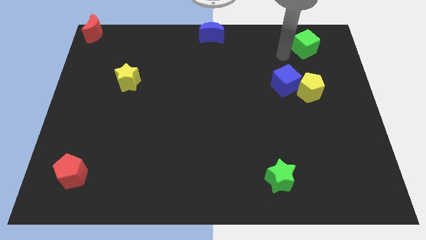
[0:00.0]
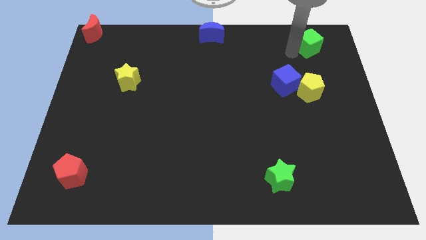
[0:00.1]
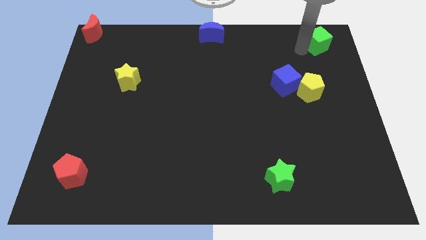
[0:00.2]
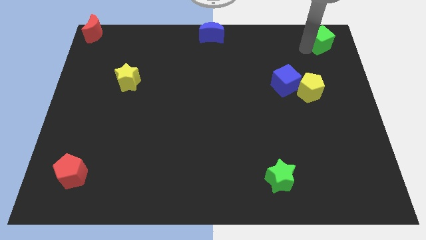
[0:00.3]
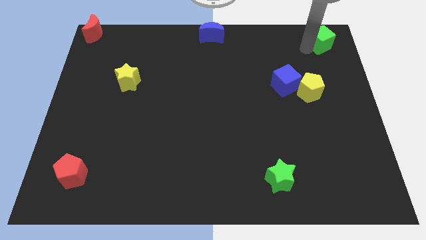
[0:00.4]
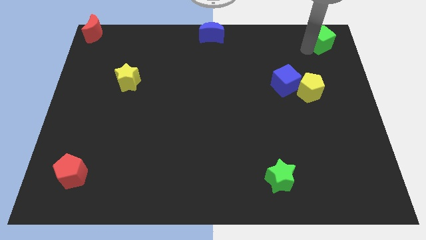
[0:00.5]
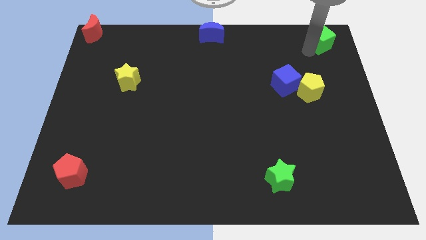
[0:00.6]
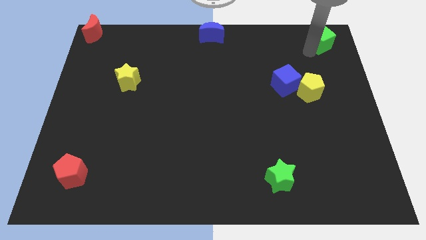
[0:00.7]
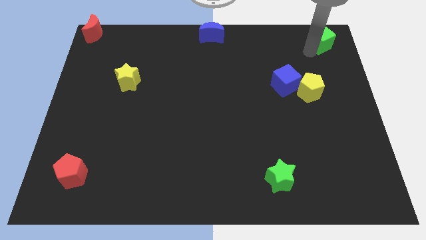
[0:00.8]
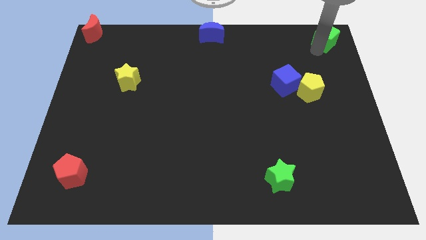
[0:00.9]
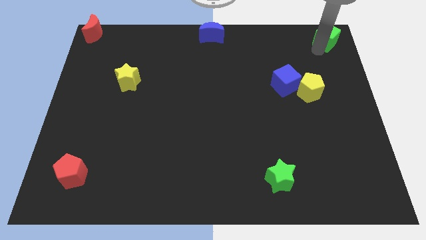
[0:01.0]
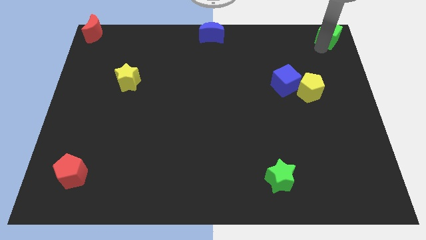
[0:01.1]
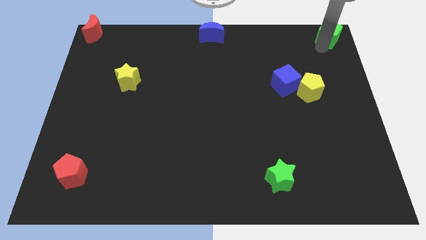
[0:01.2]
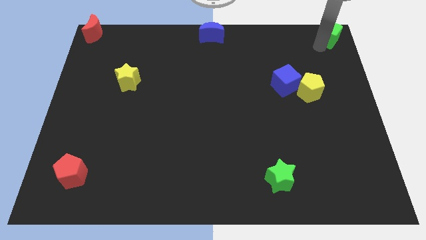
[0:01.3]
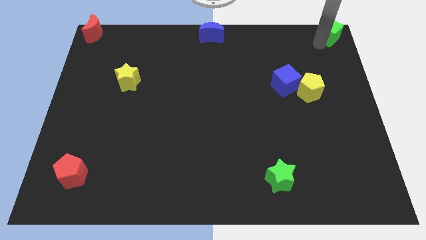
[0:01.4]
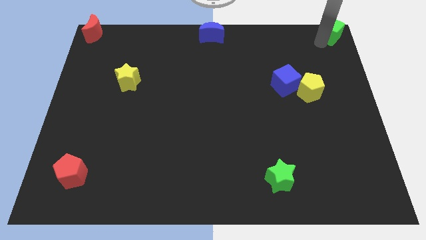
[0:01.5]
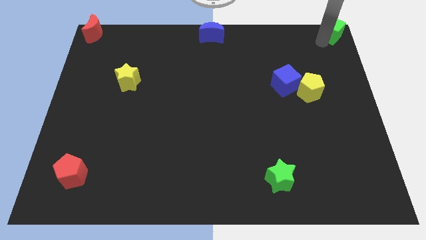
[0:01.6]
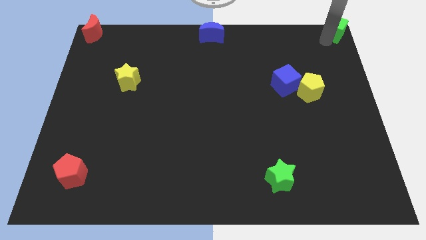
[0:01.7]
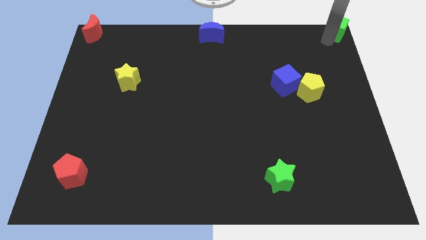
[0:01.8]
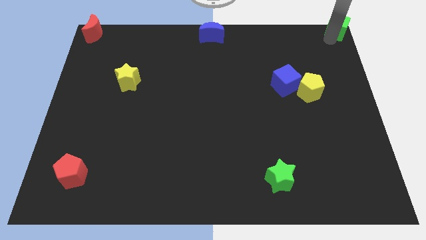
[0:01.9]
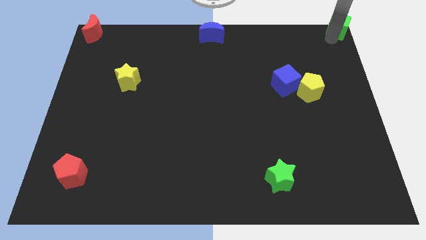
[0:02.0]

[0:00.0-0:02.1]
push the green cube on the top right of the board

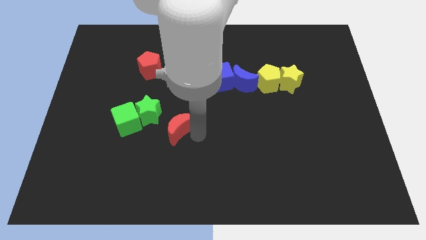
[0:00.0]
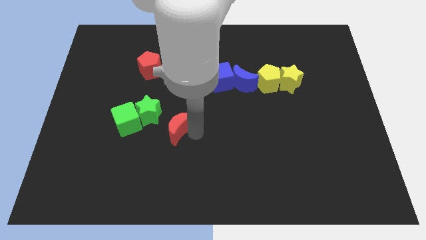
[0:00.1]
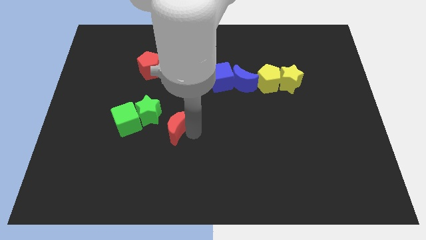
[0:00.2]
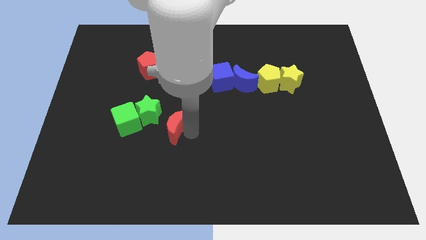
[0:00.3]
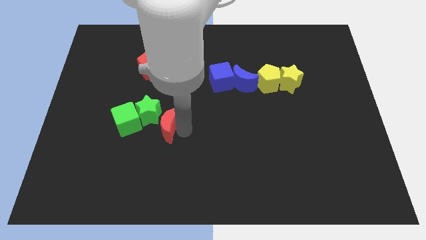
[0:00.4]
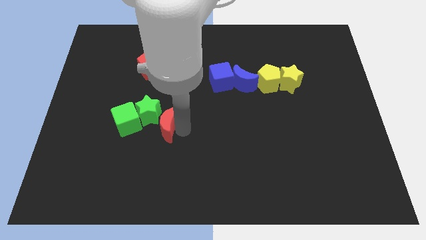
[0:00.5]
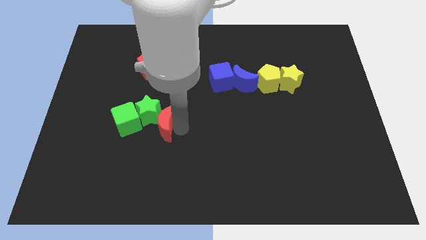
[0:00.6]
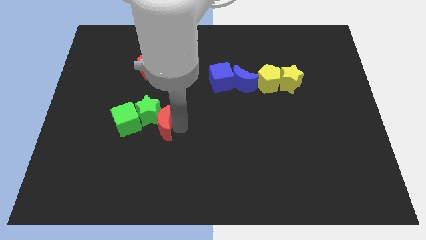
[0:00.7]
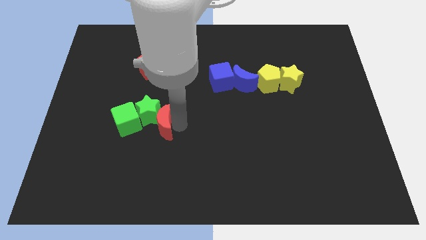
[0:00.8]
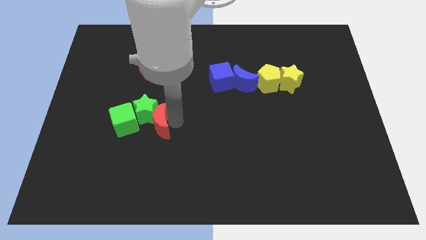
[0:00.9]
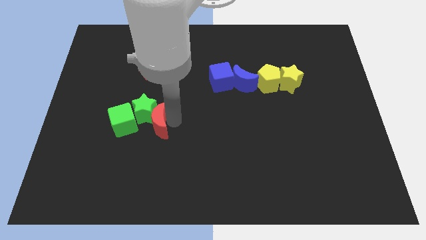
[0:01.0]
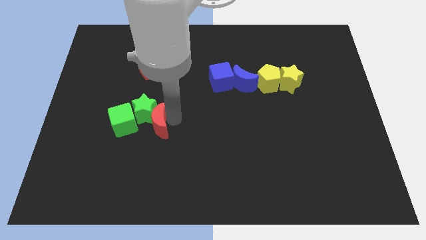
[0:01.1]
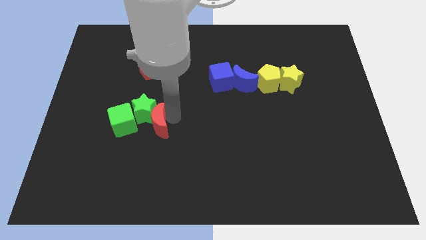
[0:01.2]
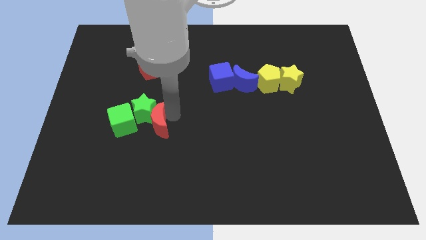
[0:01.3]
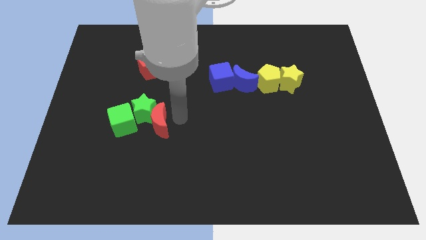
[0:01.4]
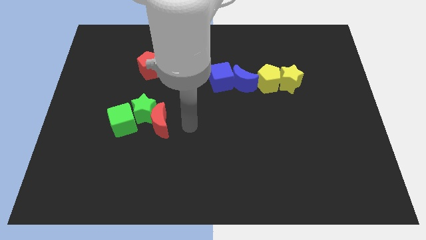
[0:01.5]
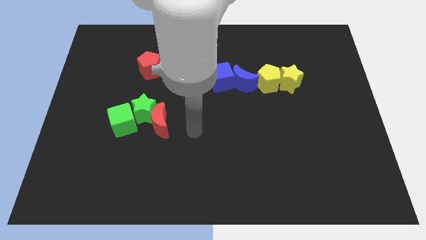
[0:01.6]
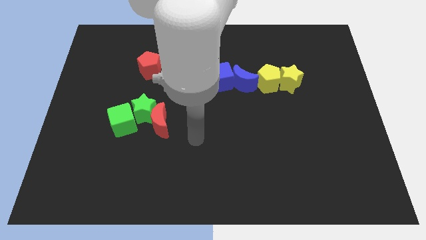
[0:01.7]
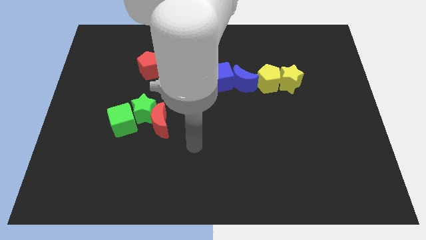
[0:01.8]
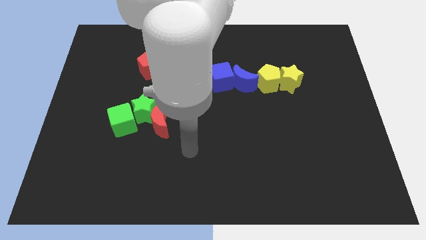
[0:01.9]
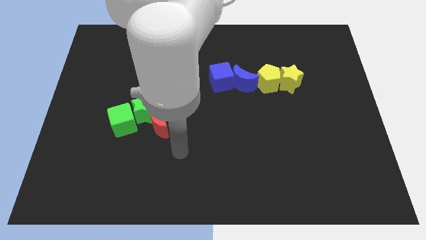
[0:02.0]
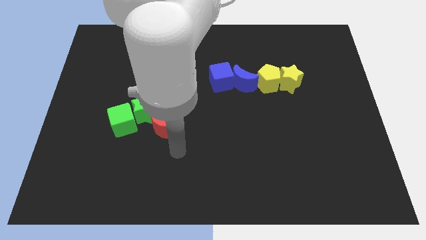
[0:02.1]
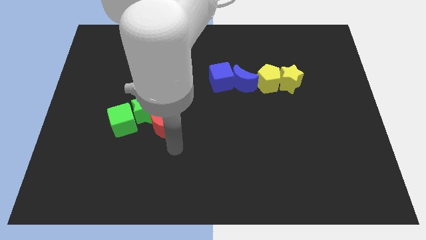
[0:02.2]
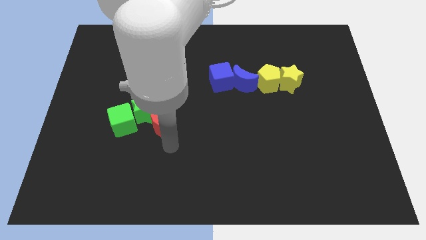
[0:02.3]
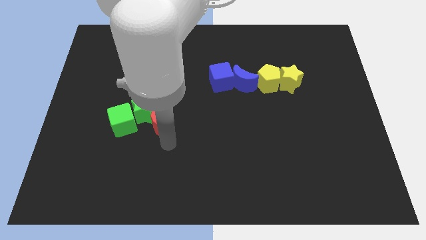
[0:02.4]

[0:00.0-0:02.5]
place red moon to the right side of green star

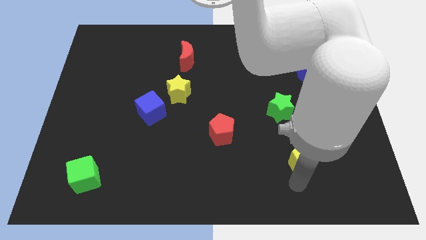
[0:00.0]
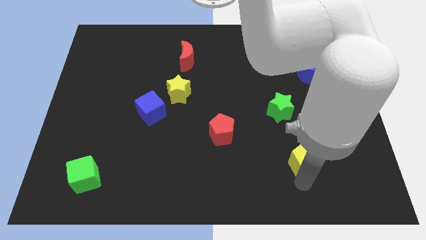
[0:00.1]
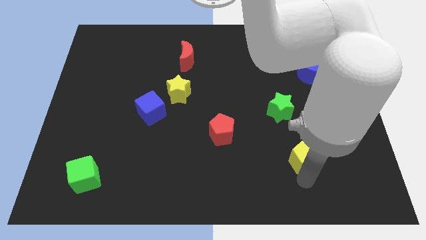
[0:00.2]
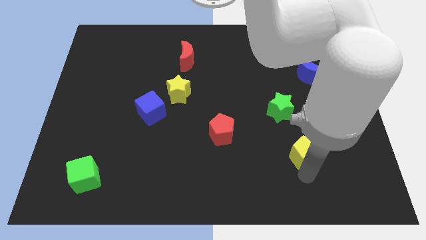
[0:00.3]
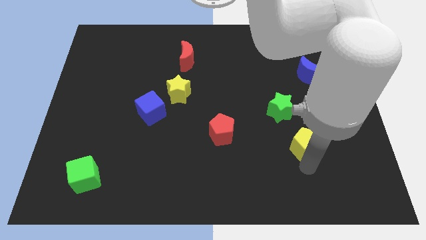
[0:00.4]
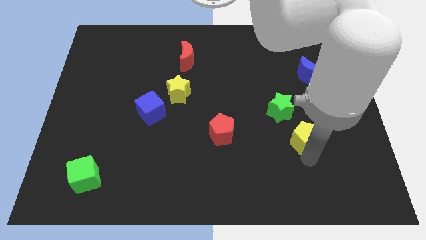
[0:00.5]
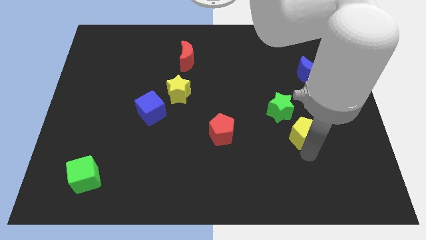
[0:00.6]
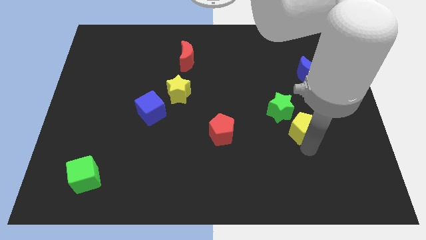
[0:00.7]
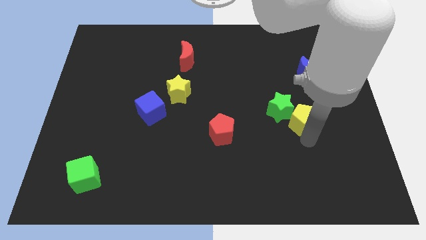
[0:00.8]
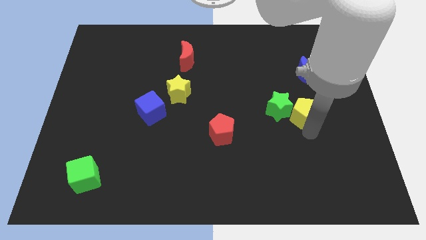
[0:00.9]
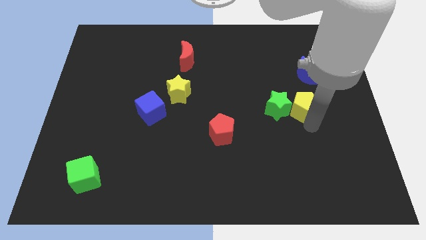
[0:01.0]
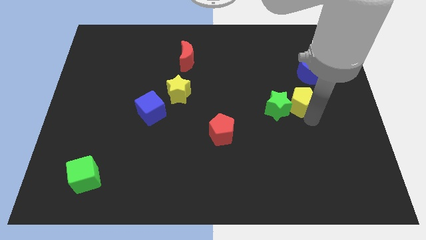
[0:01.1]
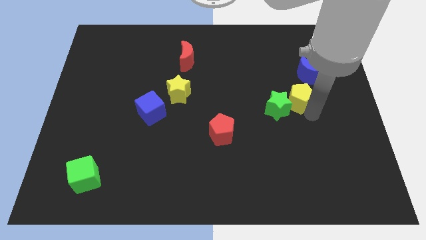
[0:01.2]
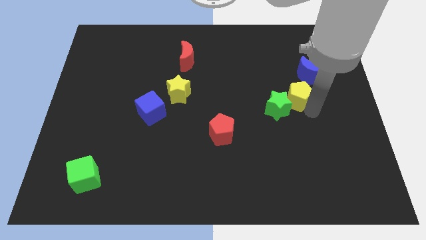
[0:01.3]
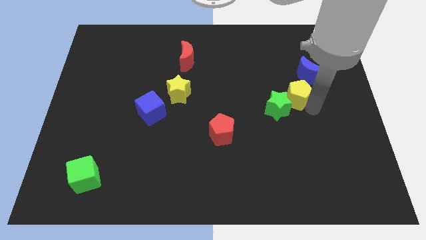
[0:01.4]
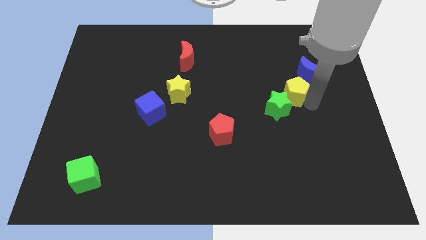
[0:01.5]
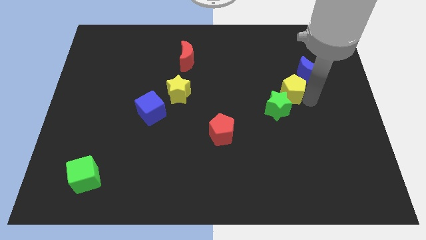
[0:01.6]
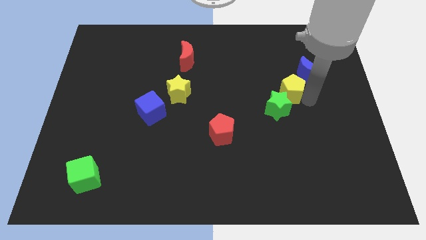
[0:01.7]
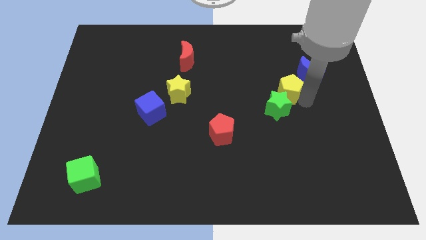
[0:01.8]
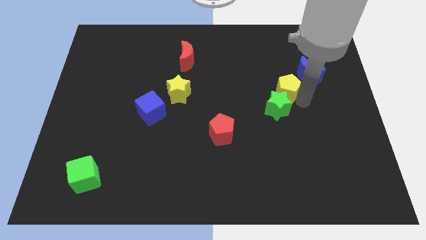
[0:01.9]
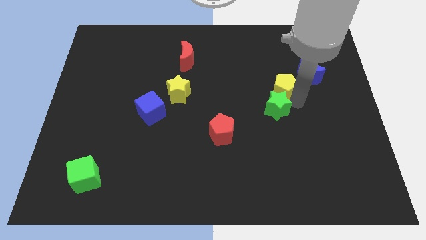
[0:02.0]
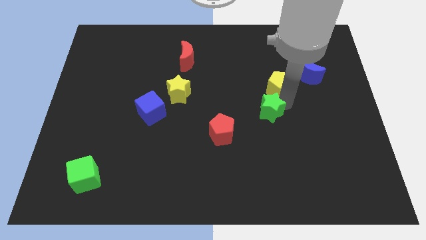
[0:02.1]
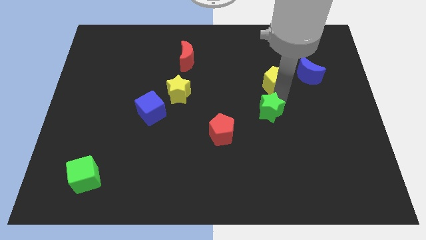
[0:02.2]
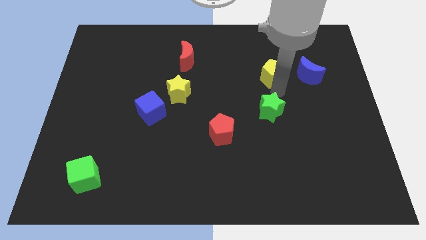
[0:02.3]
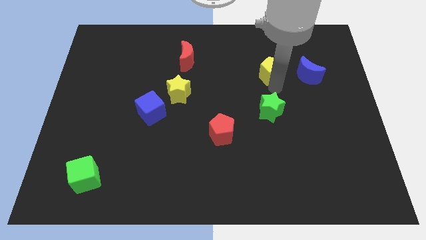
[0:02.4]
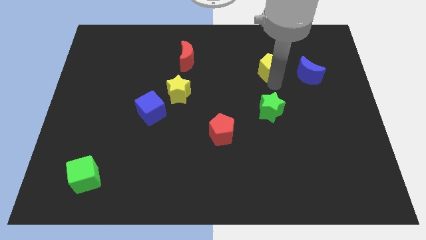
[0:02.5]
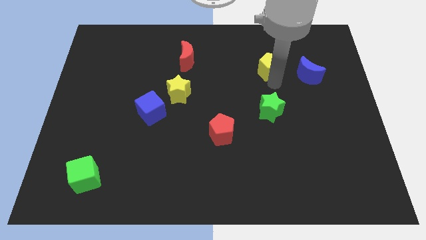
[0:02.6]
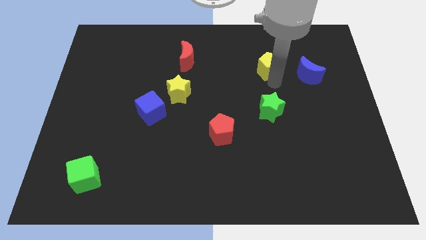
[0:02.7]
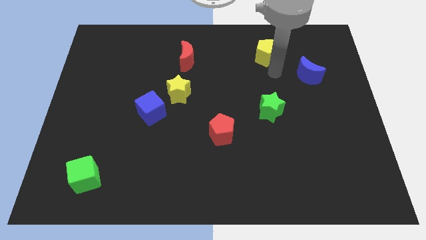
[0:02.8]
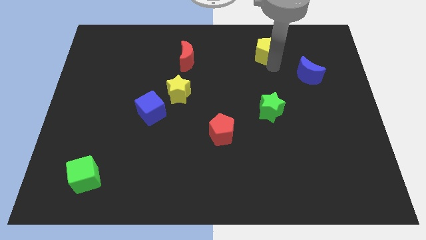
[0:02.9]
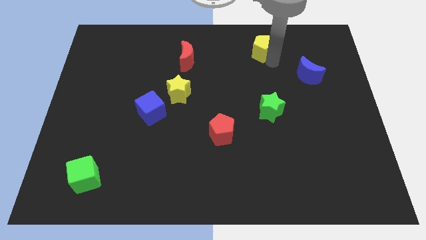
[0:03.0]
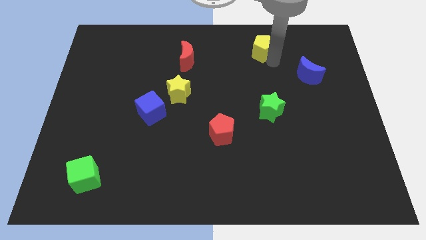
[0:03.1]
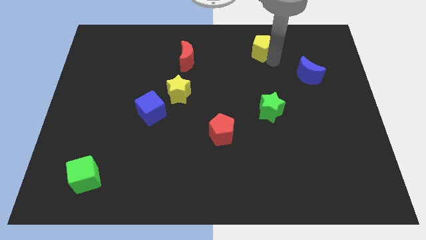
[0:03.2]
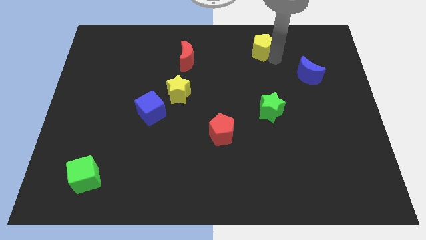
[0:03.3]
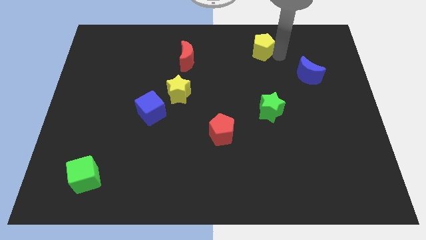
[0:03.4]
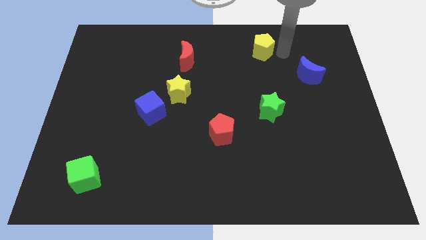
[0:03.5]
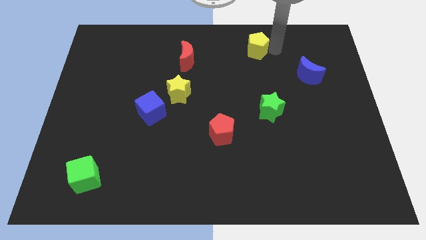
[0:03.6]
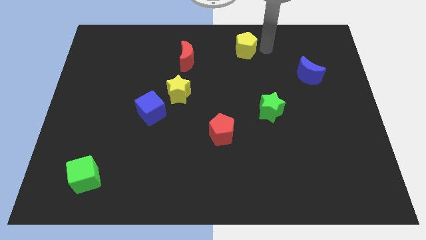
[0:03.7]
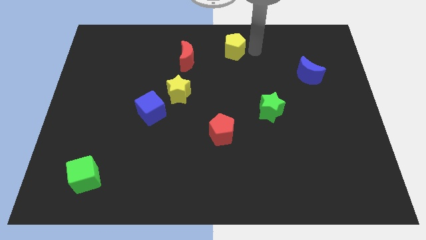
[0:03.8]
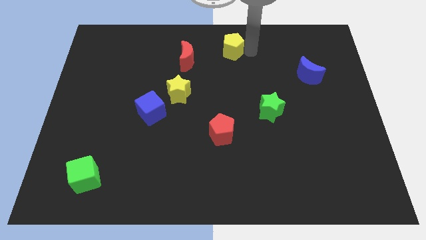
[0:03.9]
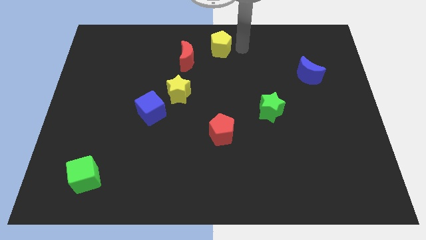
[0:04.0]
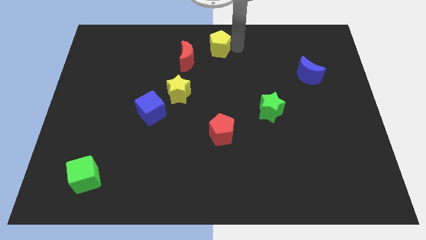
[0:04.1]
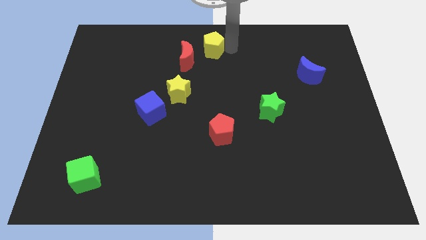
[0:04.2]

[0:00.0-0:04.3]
push the yellow pentagon to the top center of the board
